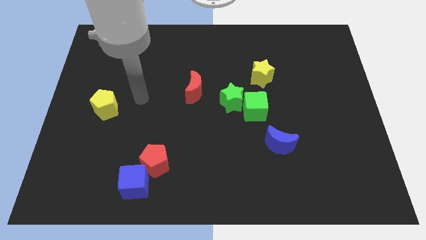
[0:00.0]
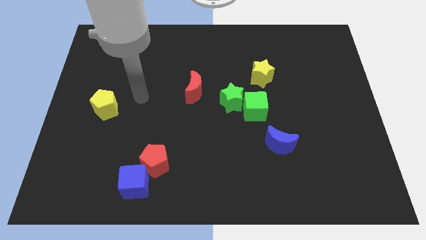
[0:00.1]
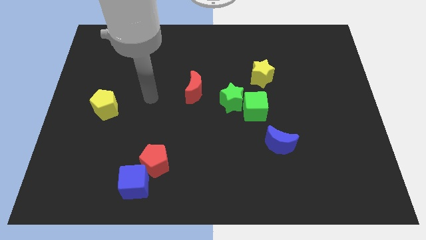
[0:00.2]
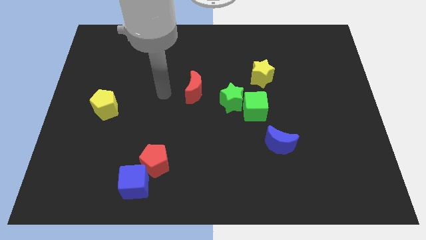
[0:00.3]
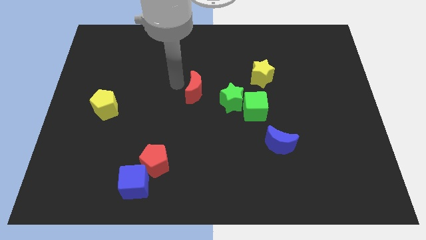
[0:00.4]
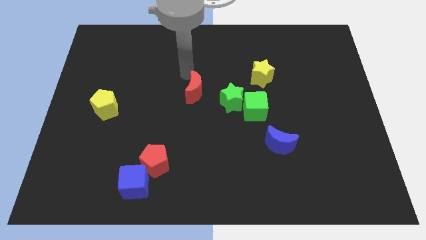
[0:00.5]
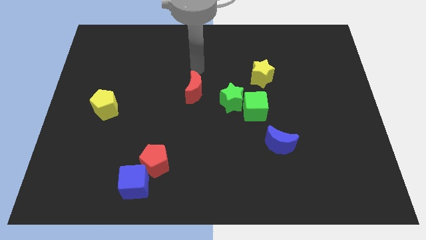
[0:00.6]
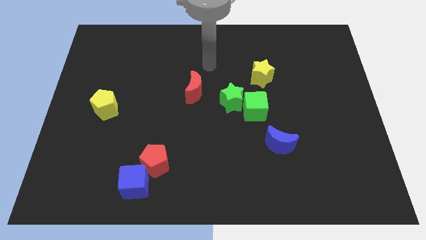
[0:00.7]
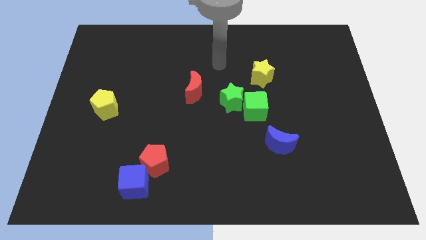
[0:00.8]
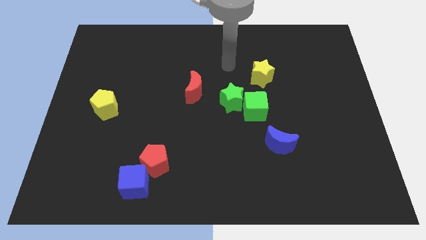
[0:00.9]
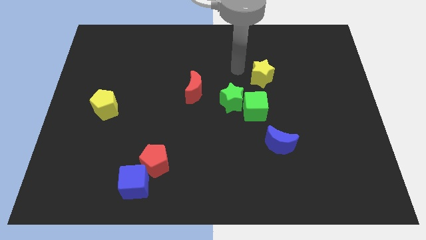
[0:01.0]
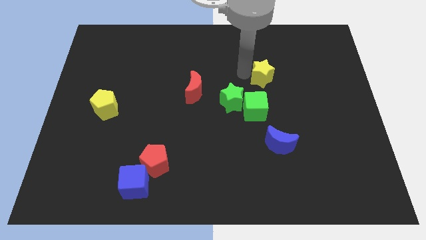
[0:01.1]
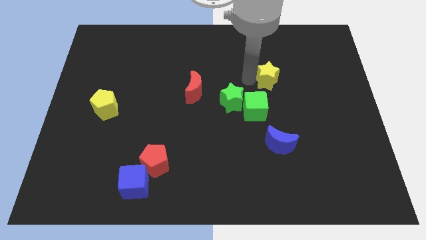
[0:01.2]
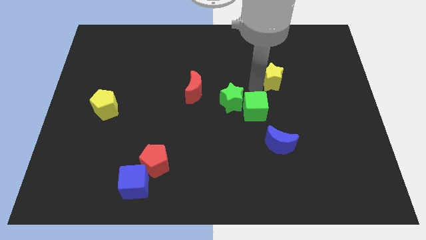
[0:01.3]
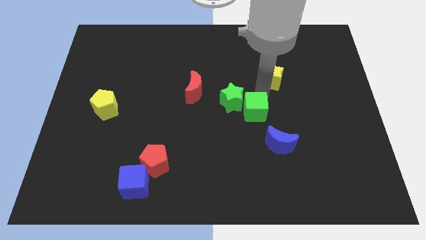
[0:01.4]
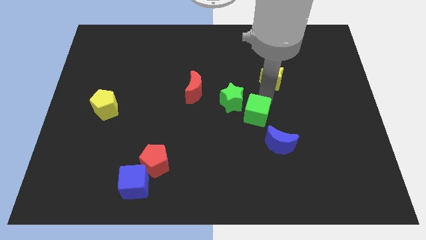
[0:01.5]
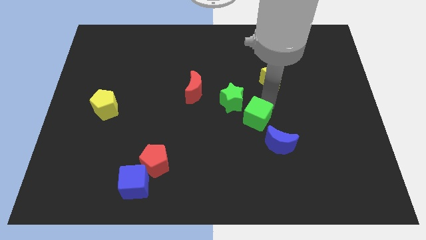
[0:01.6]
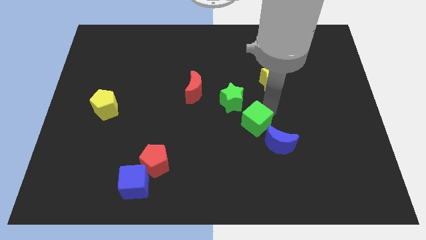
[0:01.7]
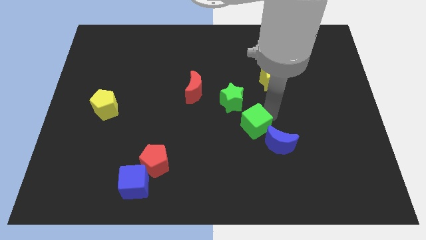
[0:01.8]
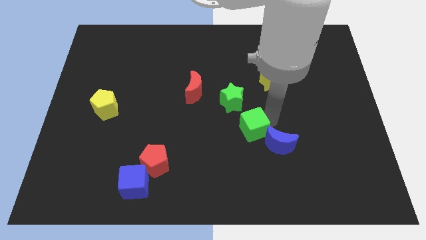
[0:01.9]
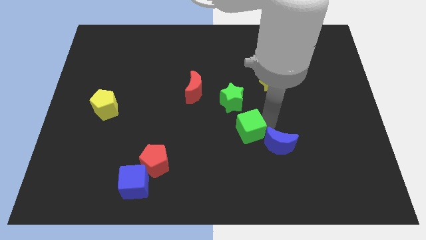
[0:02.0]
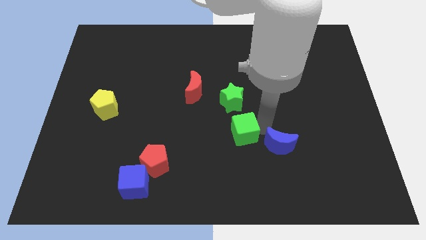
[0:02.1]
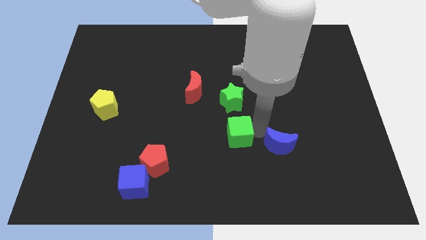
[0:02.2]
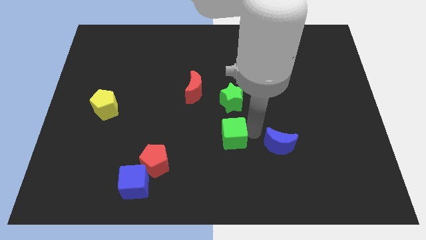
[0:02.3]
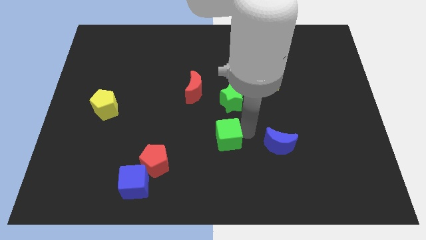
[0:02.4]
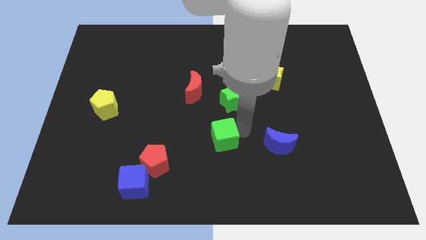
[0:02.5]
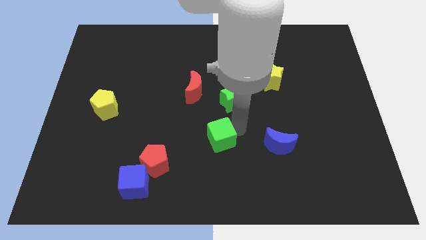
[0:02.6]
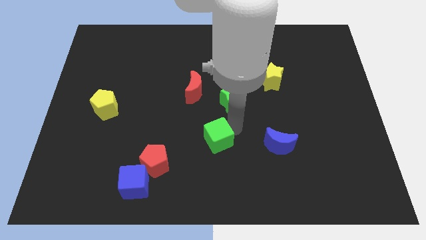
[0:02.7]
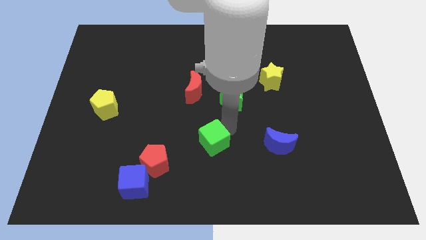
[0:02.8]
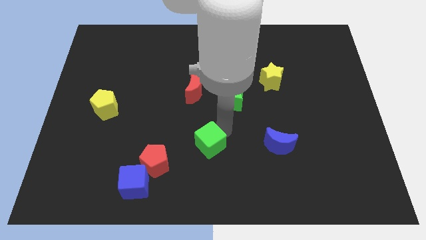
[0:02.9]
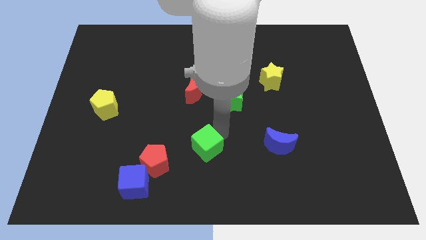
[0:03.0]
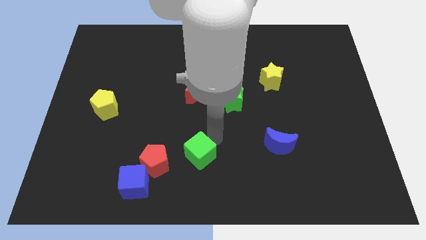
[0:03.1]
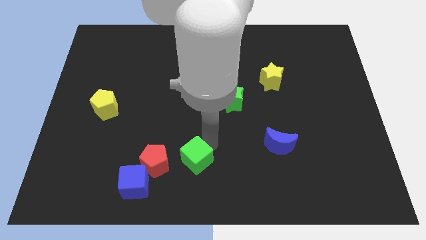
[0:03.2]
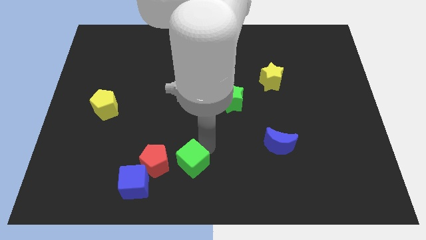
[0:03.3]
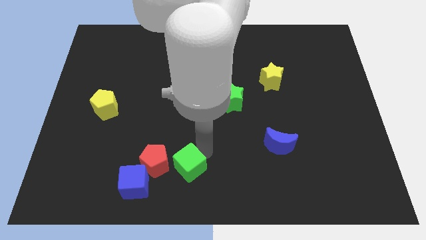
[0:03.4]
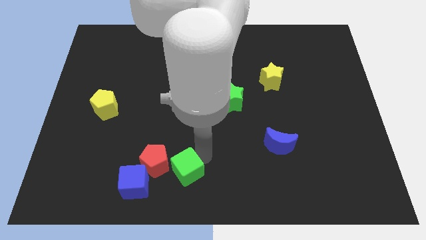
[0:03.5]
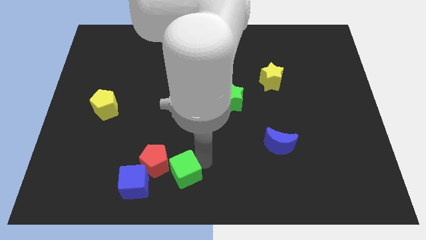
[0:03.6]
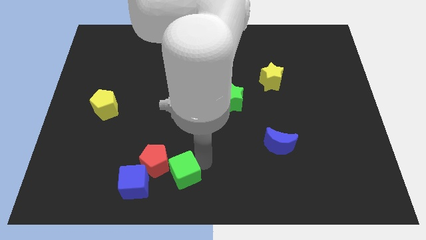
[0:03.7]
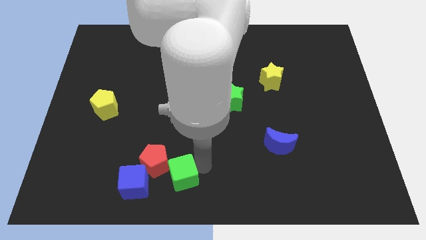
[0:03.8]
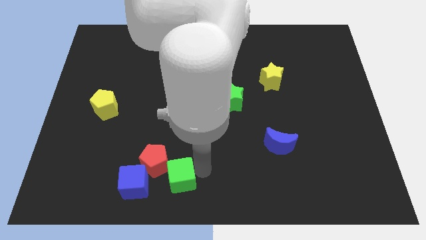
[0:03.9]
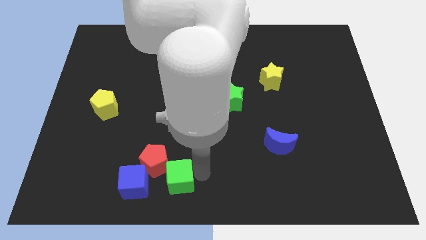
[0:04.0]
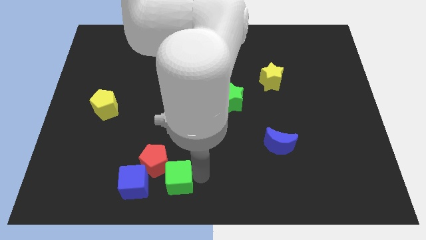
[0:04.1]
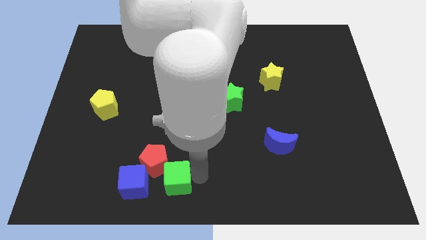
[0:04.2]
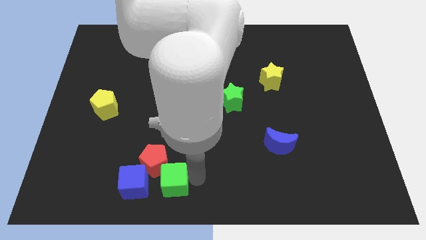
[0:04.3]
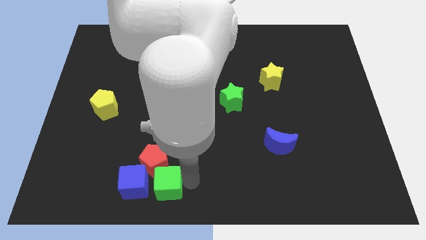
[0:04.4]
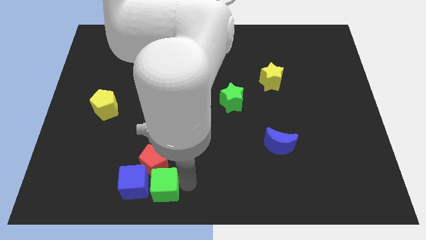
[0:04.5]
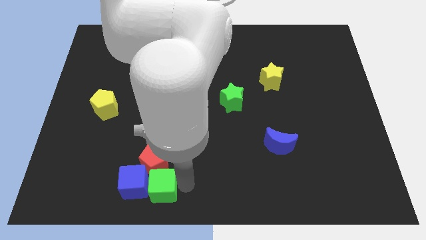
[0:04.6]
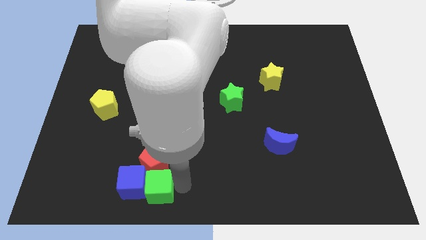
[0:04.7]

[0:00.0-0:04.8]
slide the green cube close to the blue cube

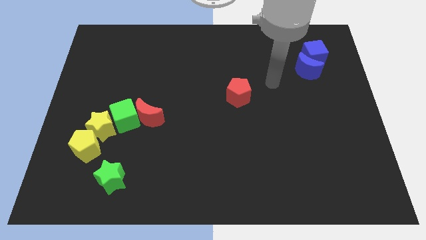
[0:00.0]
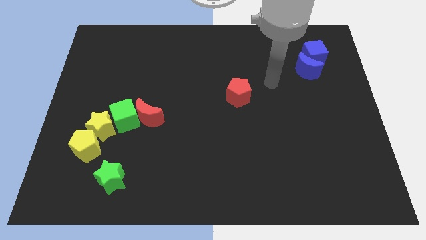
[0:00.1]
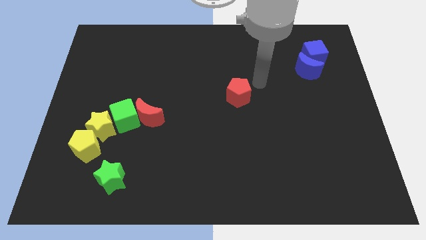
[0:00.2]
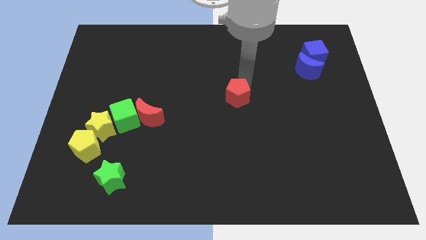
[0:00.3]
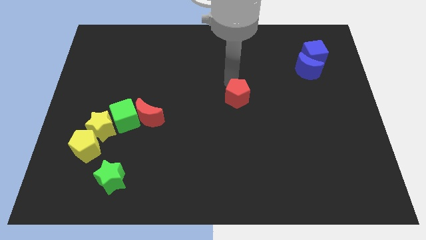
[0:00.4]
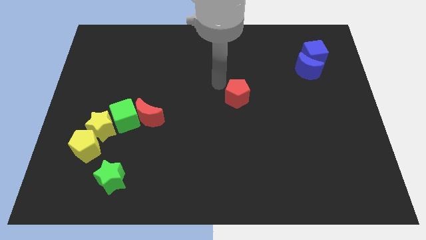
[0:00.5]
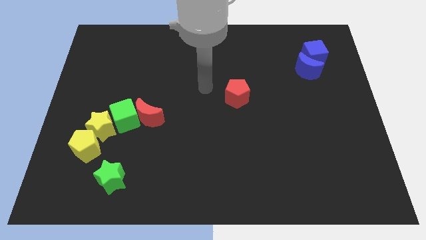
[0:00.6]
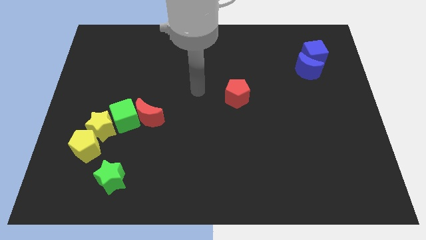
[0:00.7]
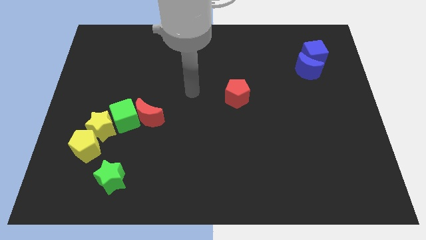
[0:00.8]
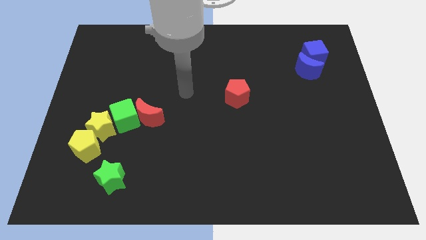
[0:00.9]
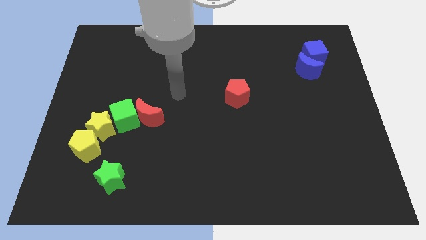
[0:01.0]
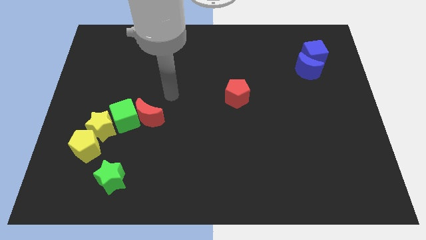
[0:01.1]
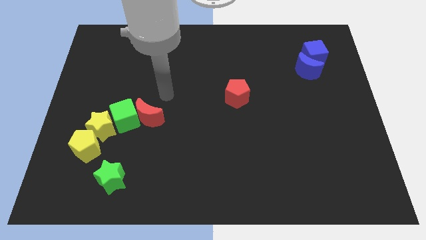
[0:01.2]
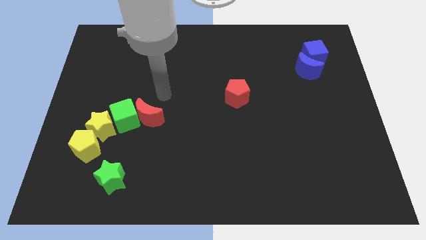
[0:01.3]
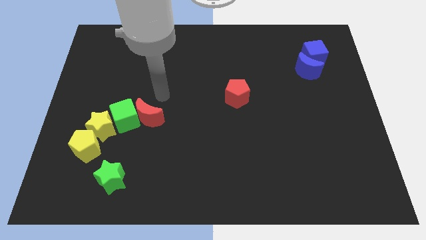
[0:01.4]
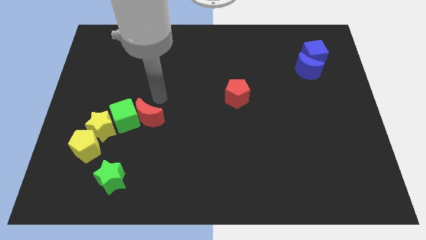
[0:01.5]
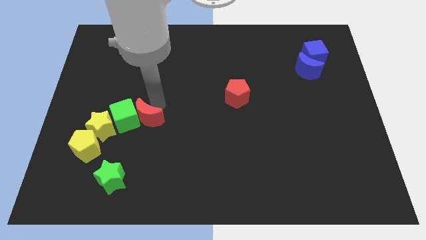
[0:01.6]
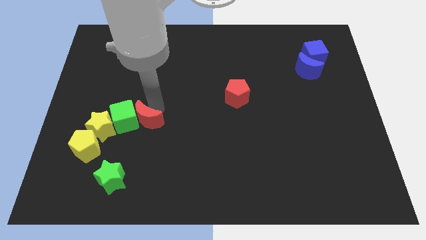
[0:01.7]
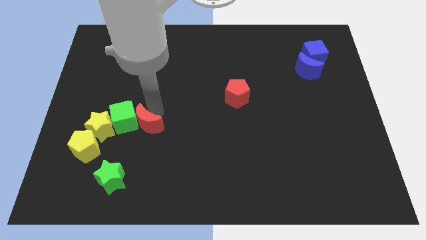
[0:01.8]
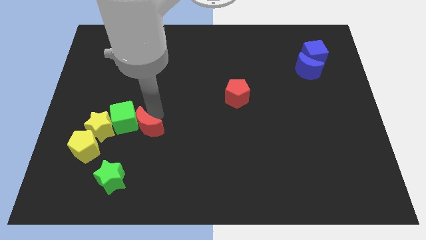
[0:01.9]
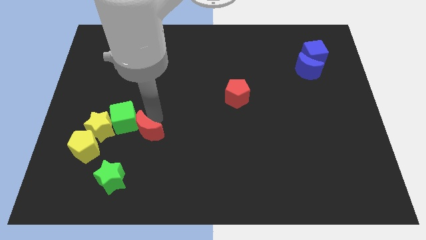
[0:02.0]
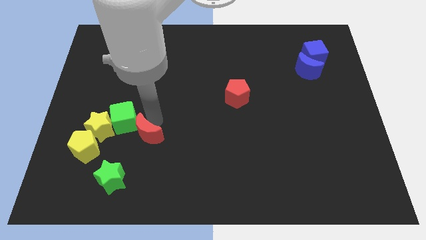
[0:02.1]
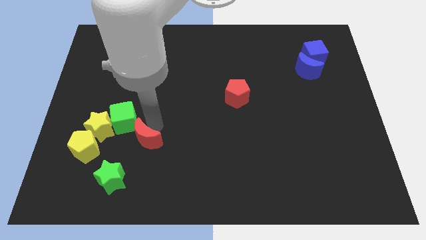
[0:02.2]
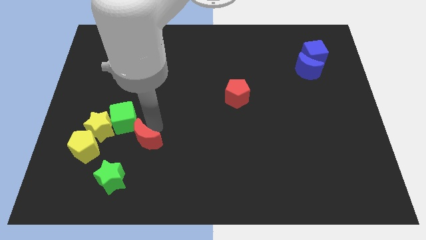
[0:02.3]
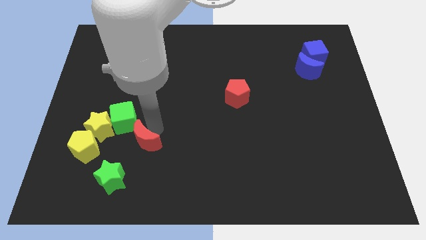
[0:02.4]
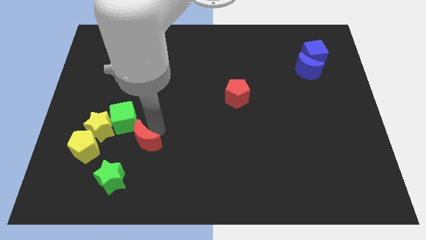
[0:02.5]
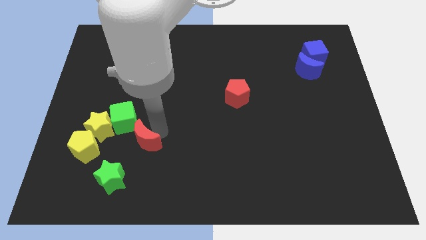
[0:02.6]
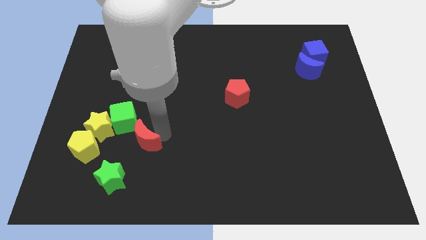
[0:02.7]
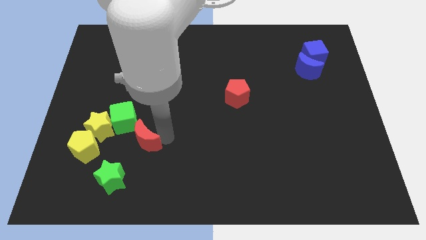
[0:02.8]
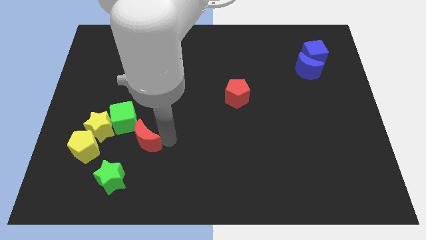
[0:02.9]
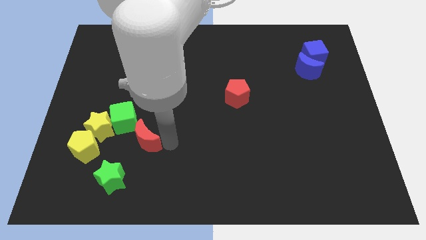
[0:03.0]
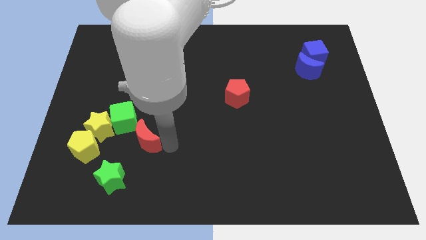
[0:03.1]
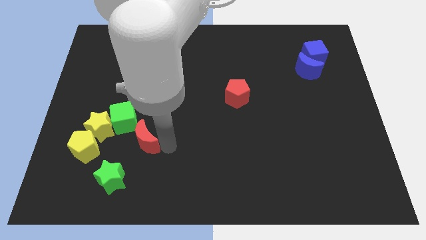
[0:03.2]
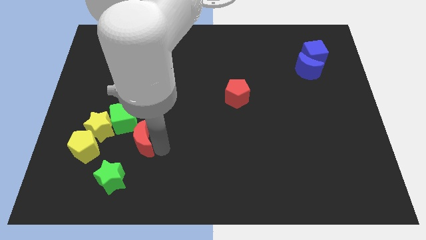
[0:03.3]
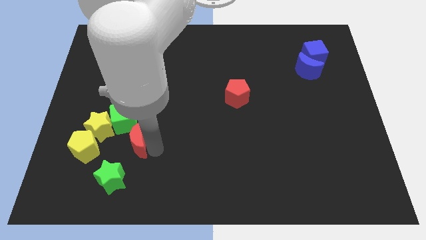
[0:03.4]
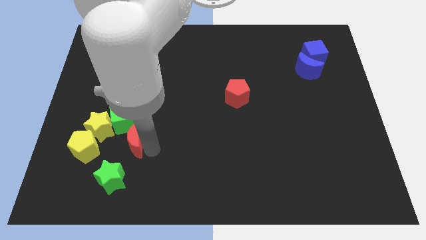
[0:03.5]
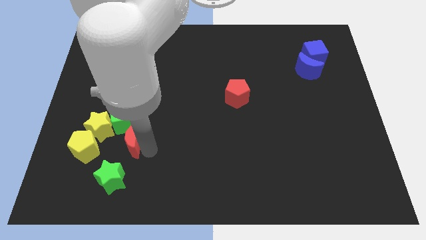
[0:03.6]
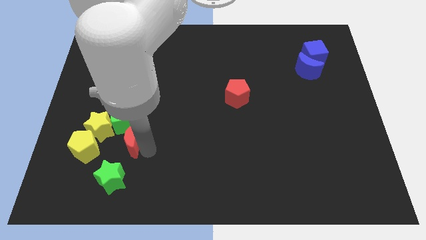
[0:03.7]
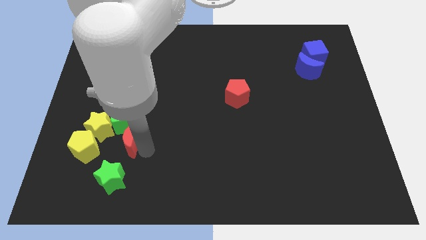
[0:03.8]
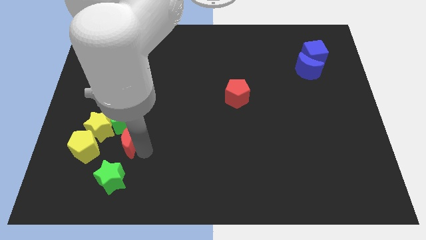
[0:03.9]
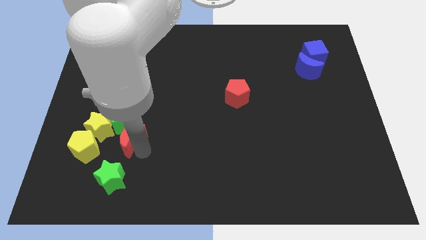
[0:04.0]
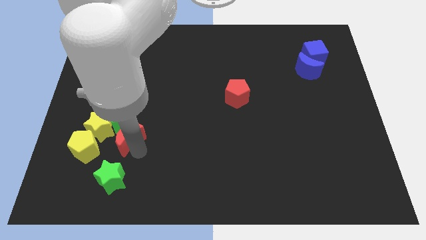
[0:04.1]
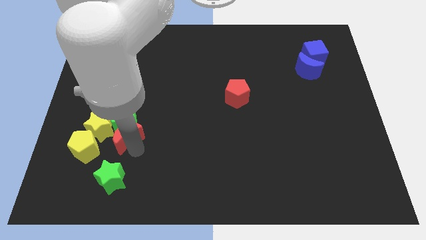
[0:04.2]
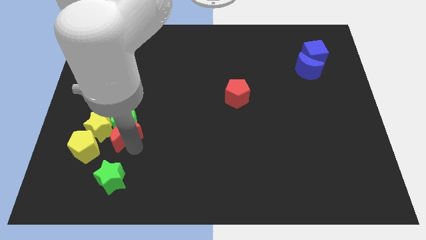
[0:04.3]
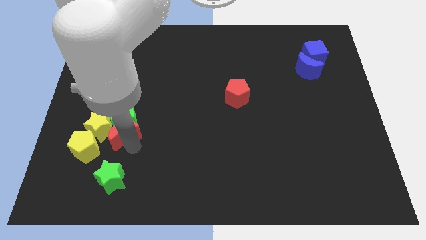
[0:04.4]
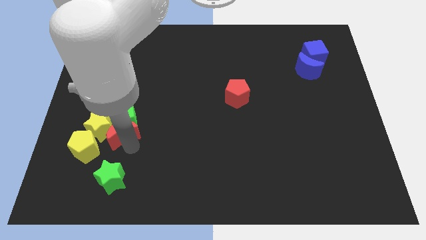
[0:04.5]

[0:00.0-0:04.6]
move the red moon towards the yellow star
